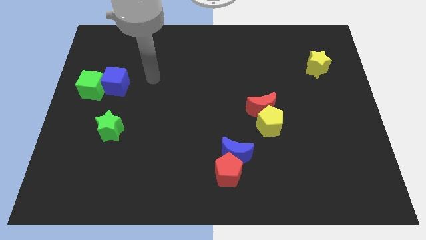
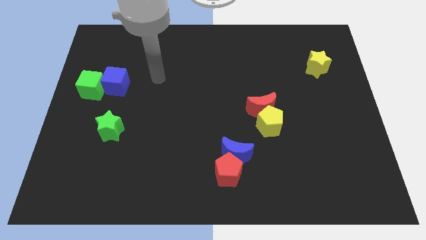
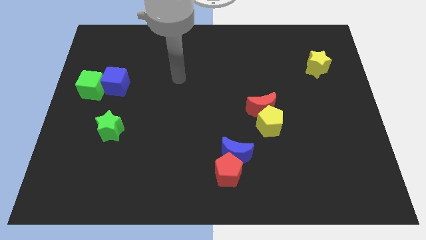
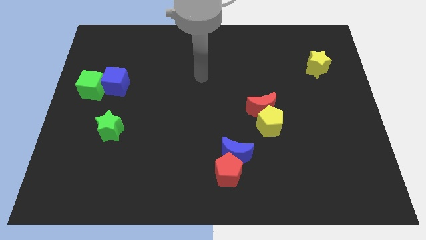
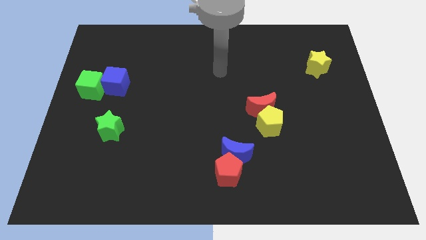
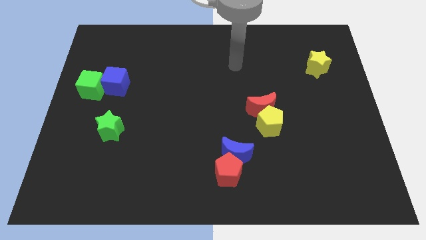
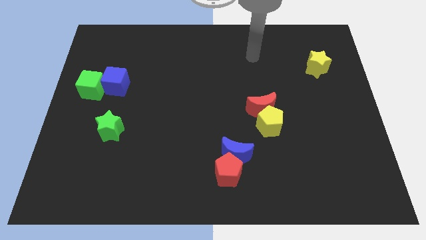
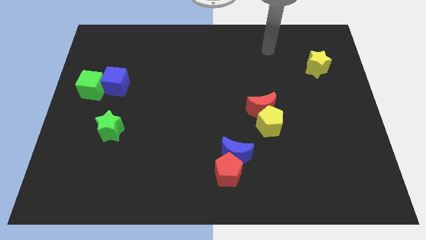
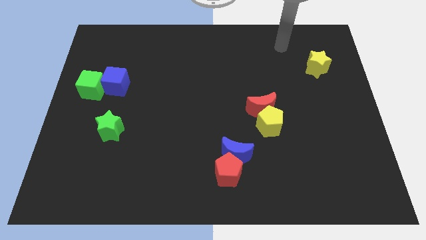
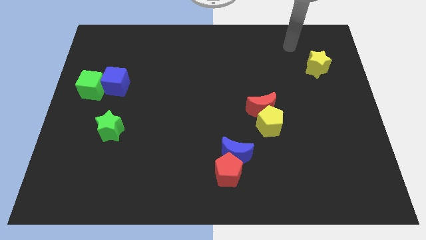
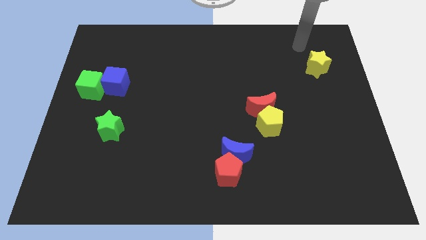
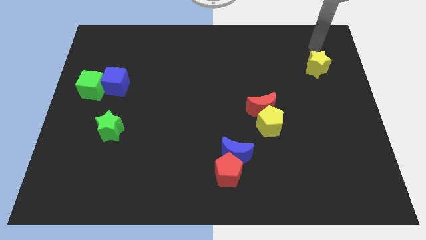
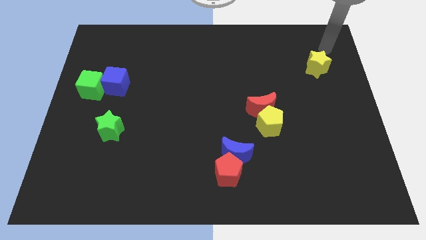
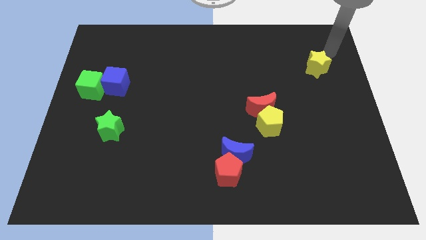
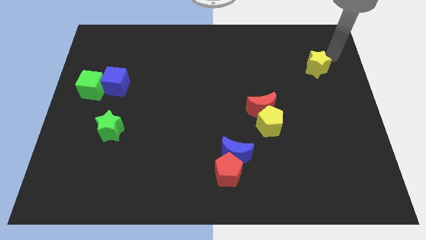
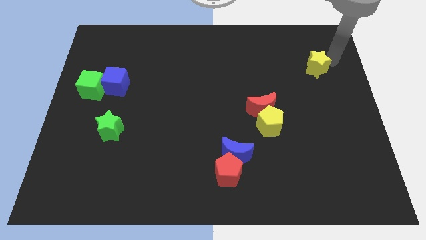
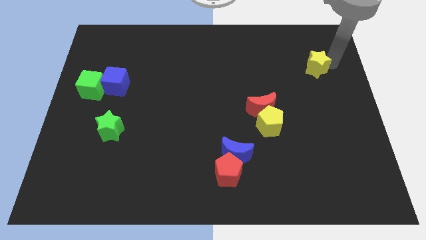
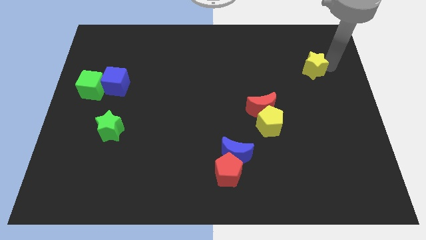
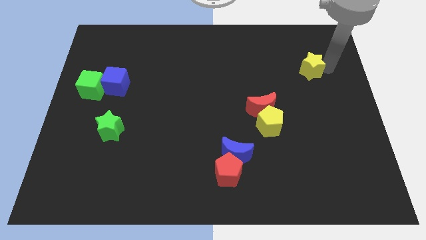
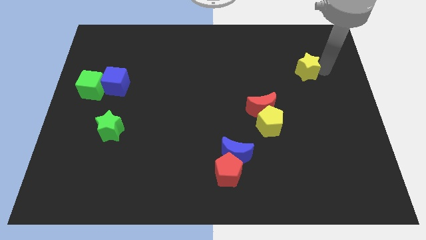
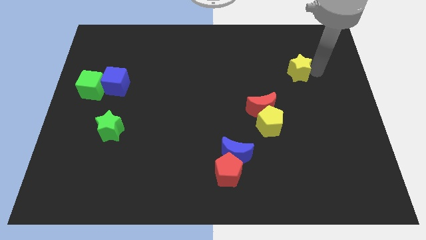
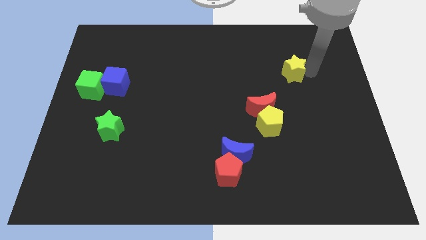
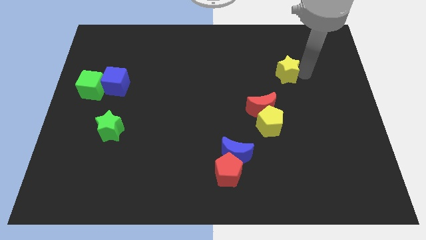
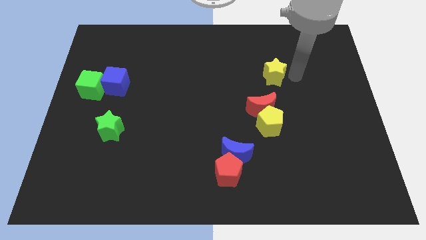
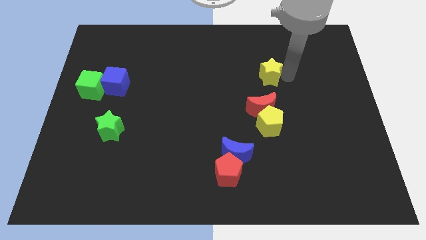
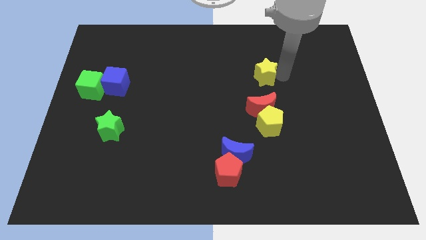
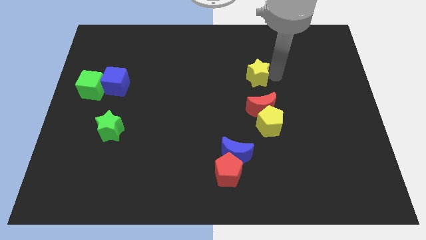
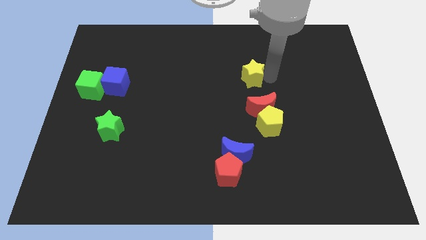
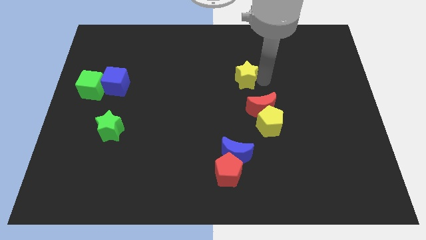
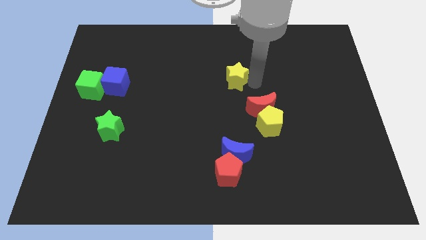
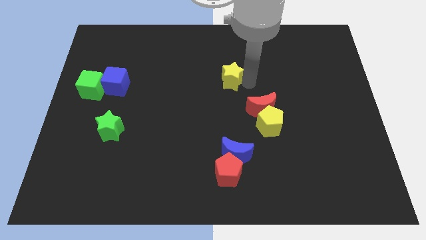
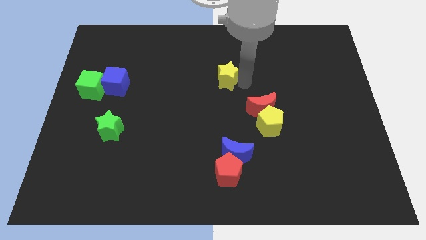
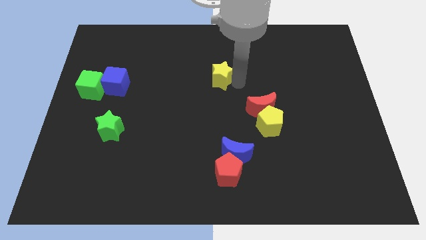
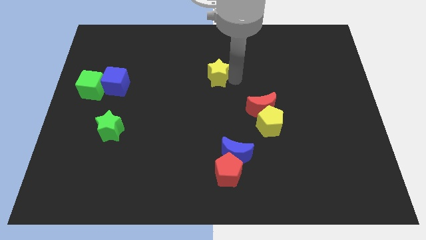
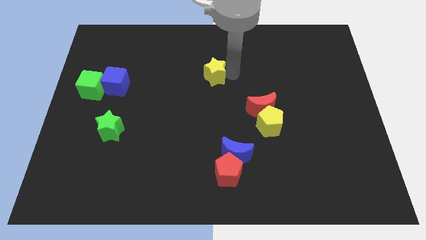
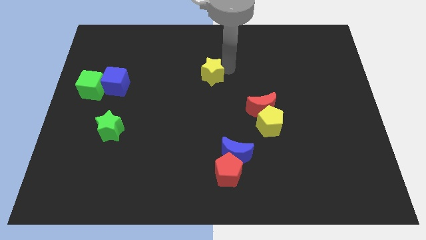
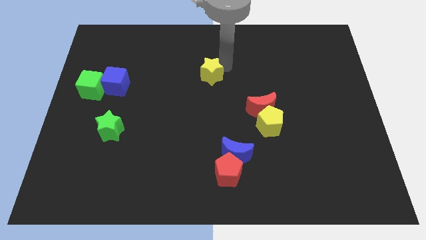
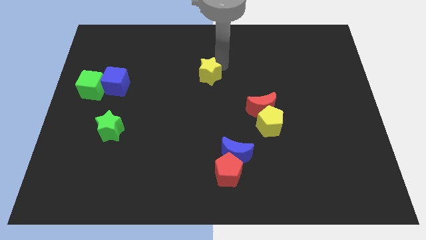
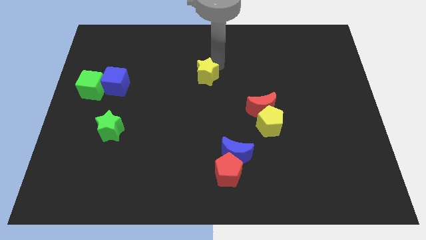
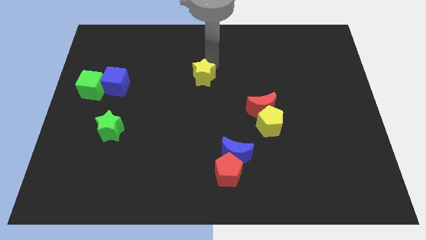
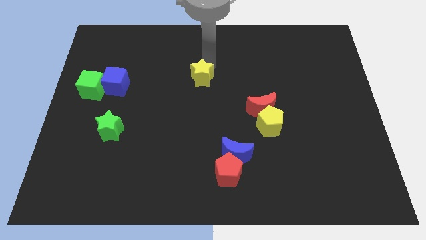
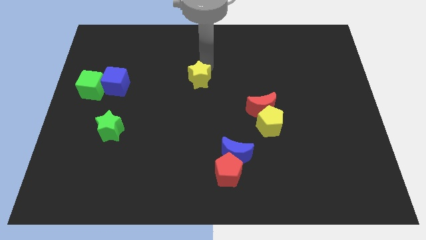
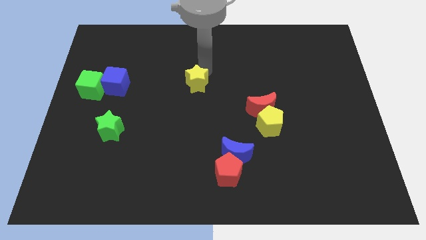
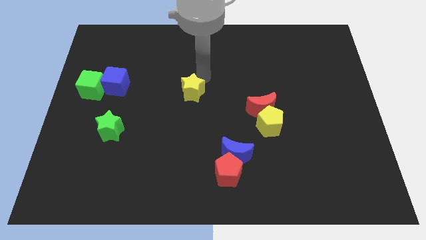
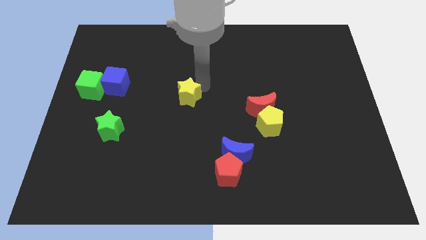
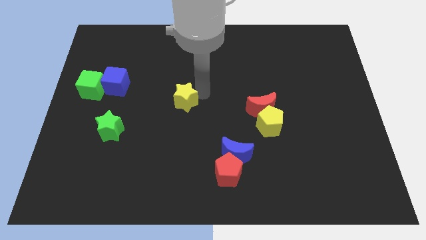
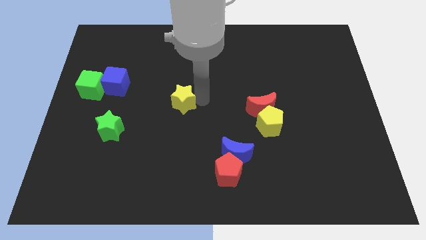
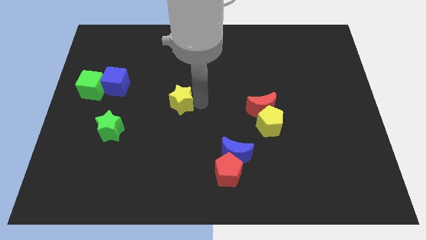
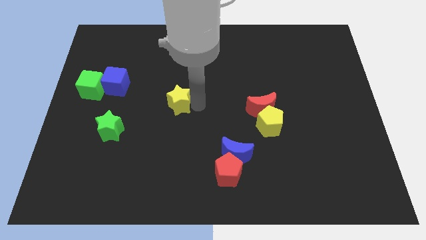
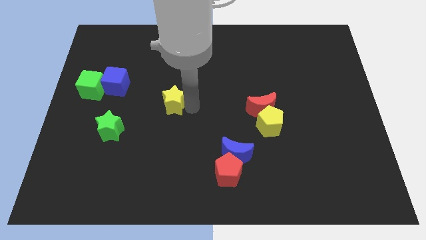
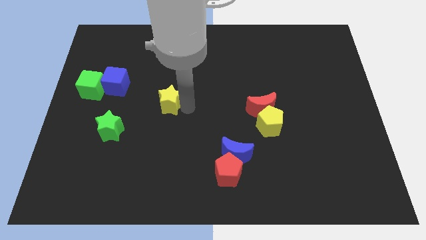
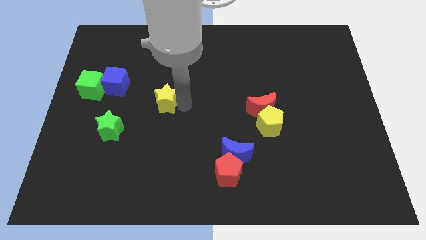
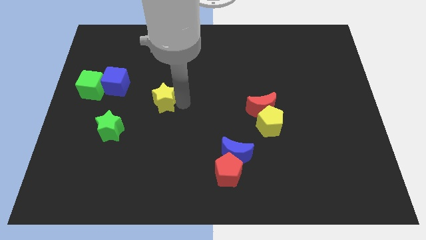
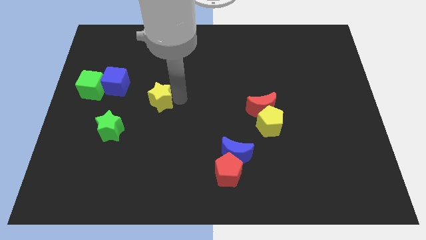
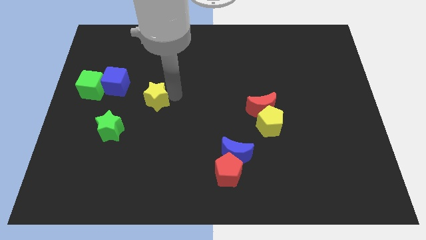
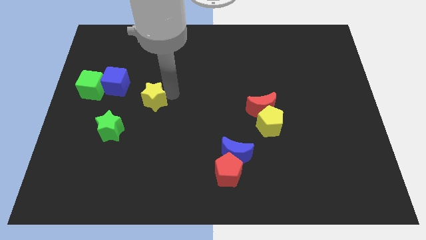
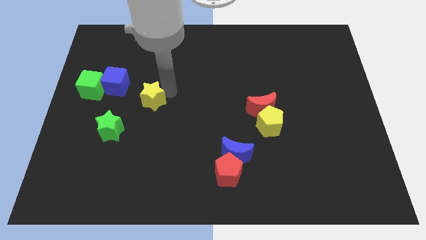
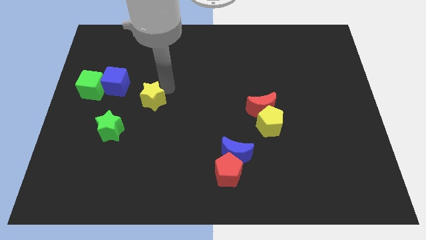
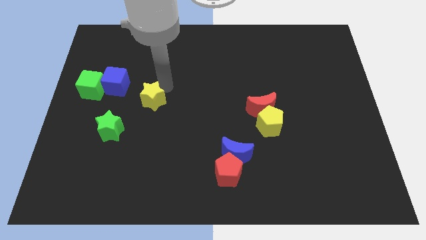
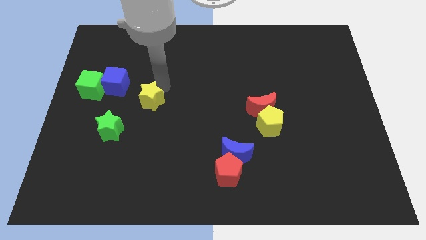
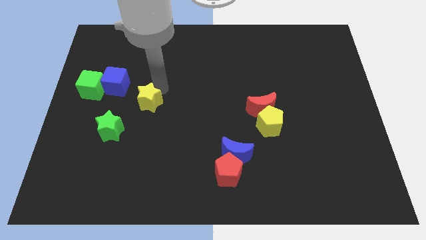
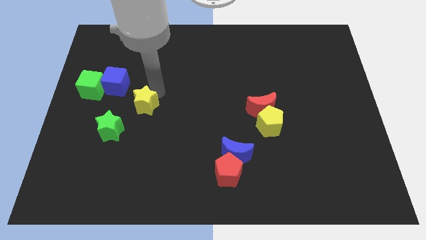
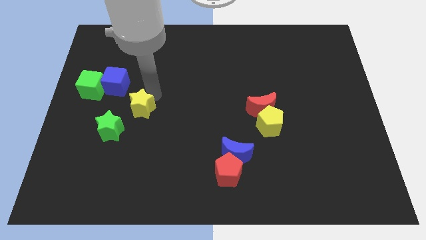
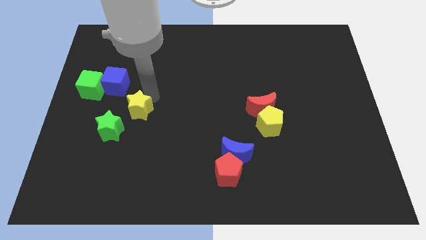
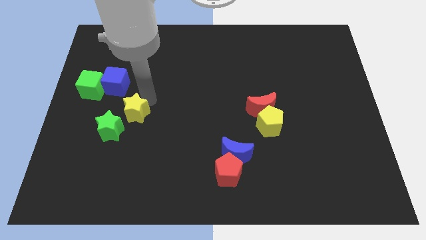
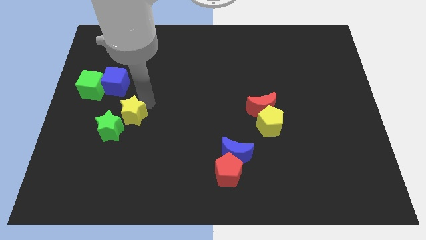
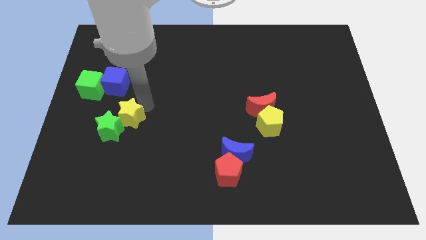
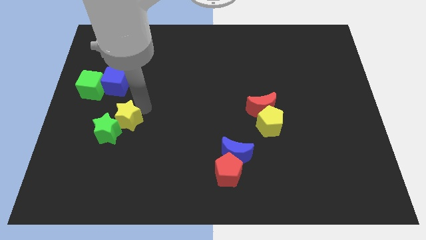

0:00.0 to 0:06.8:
push the yellow star next to the green star

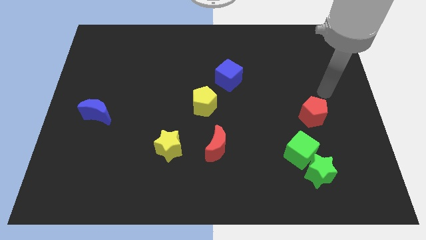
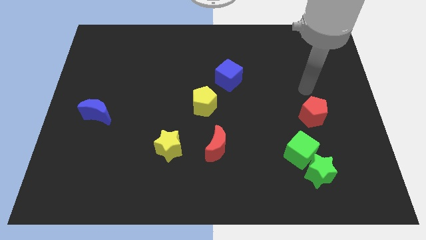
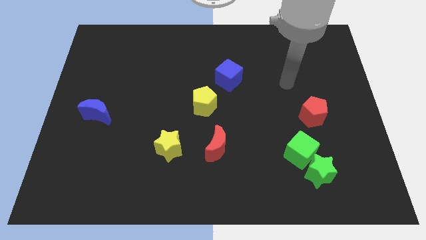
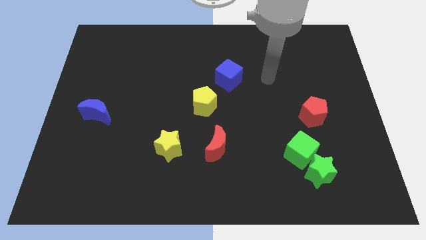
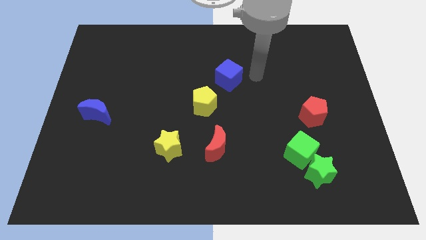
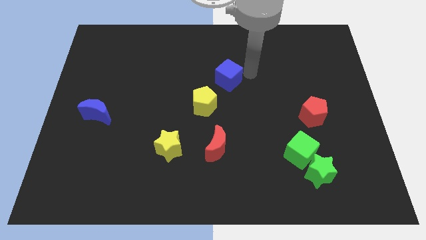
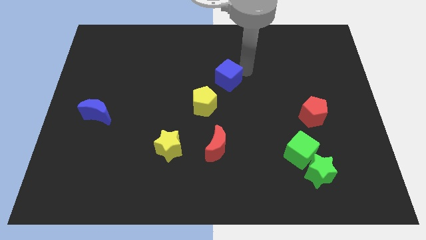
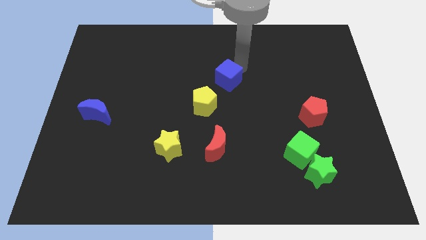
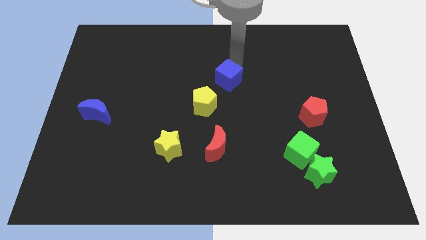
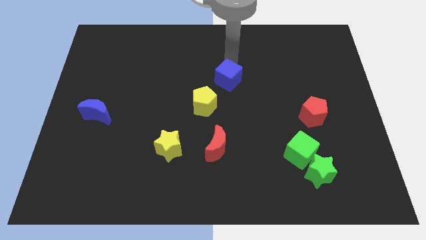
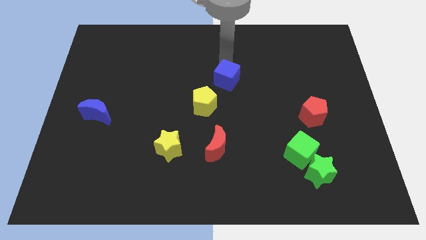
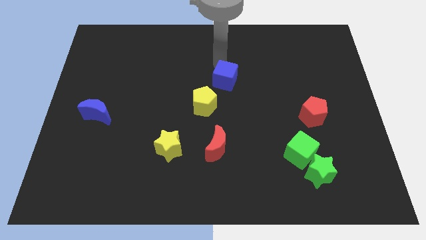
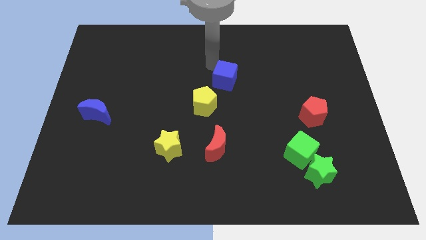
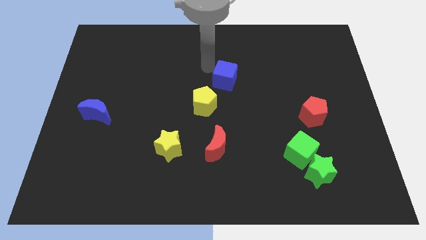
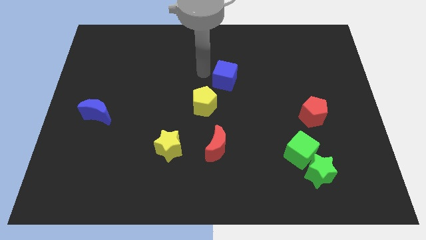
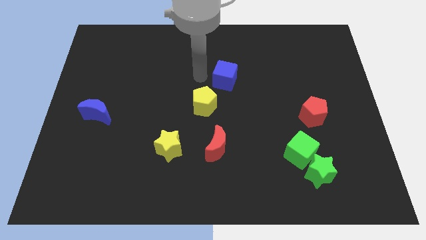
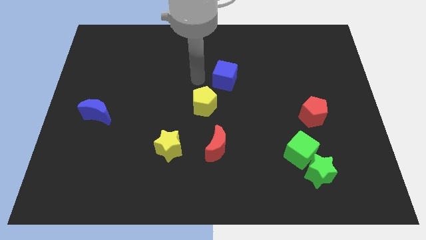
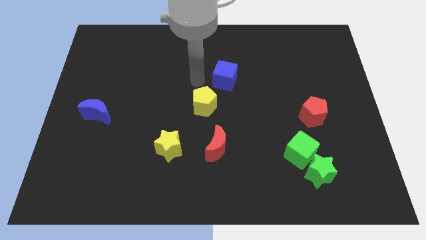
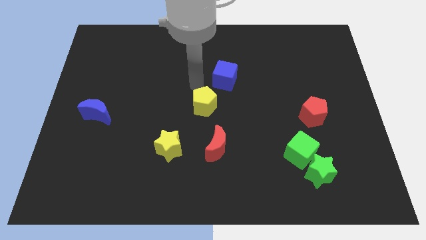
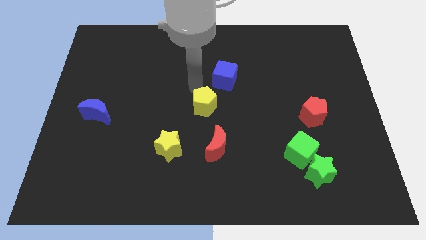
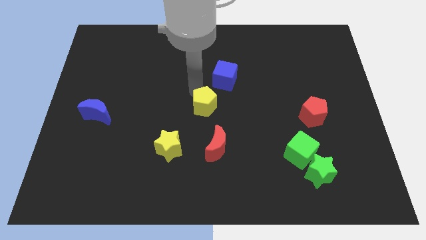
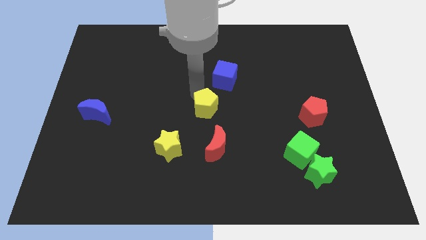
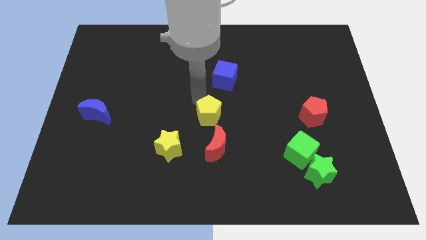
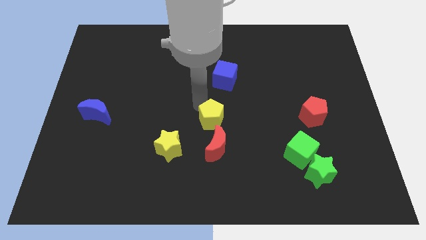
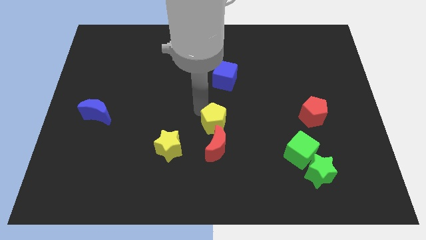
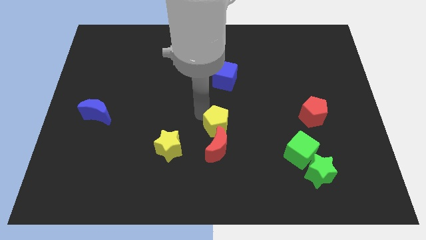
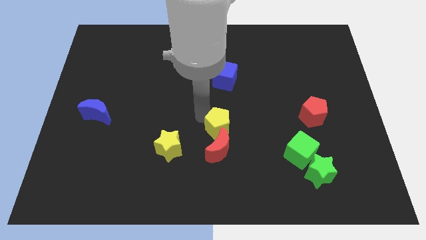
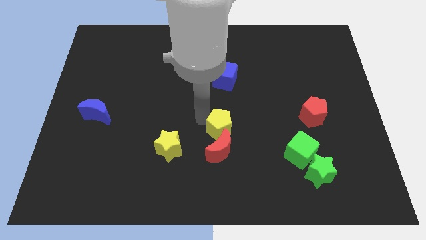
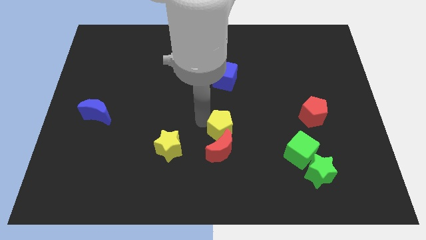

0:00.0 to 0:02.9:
push the yellow pentagon next to the red moon
